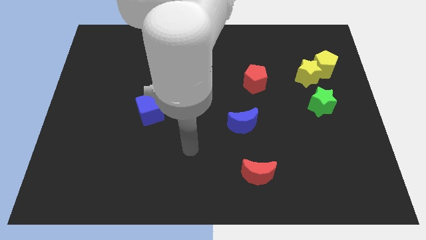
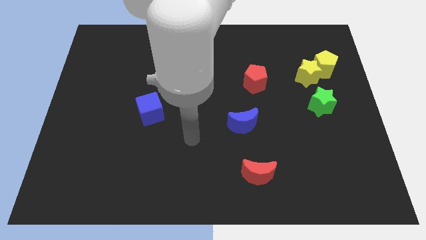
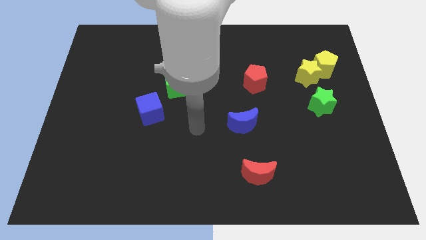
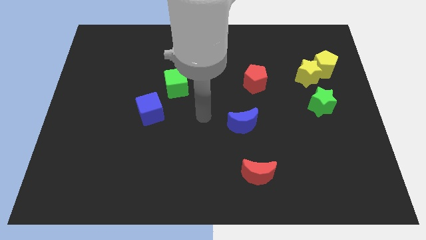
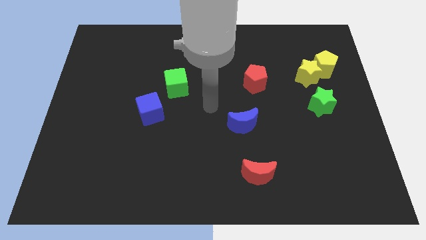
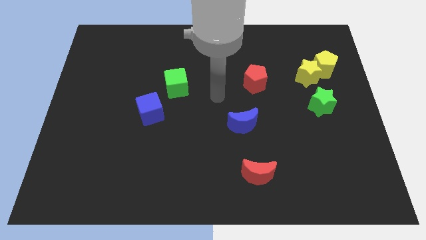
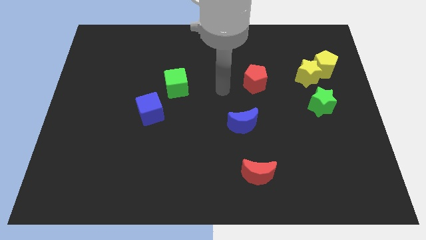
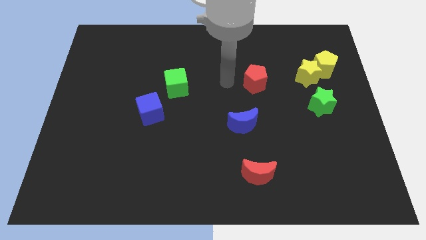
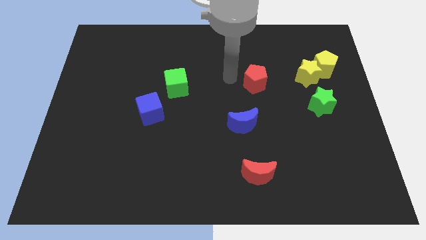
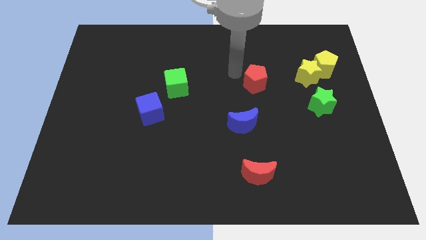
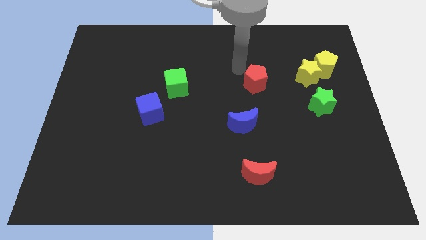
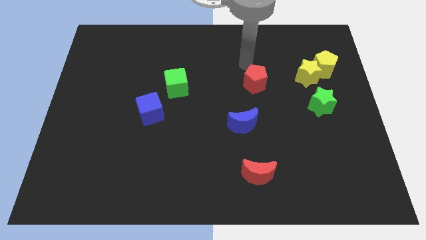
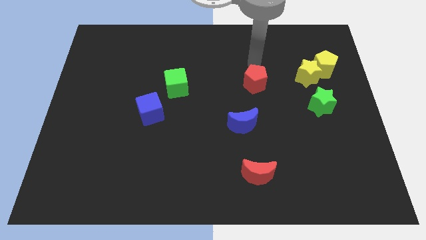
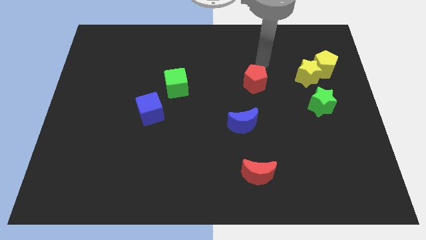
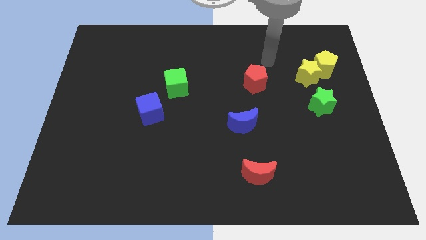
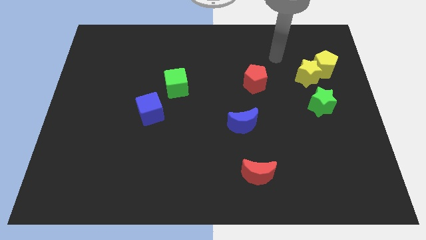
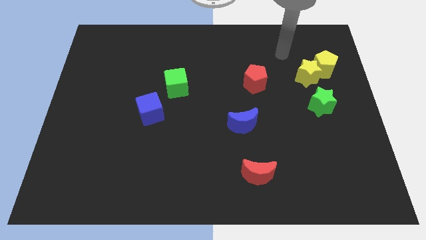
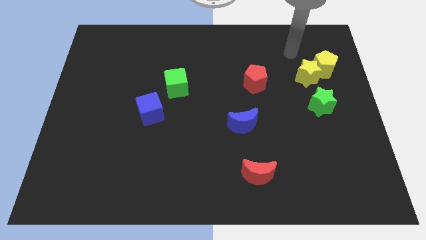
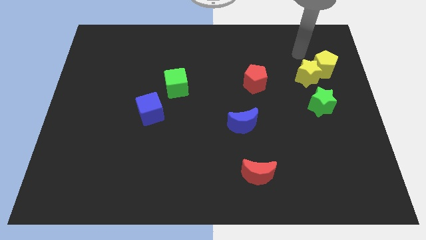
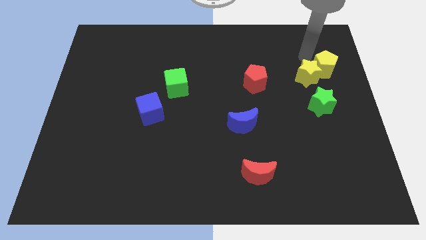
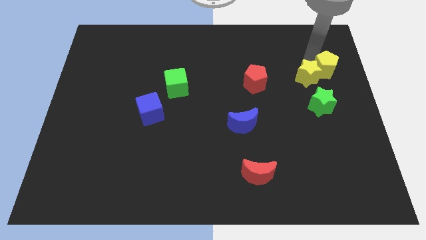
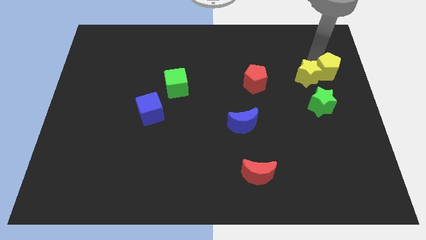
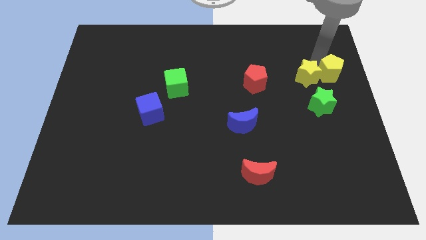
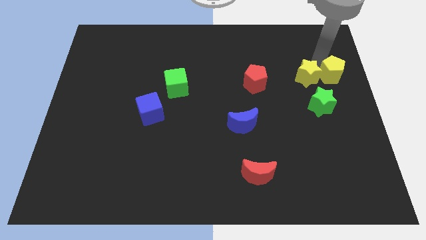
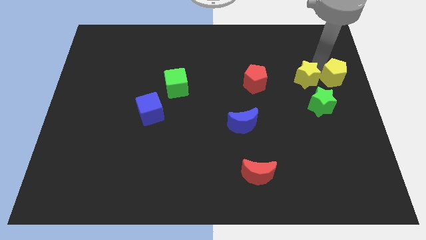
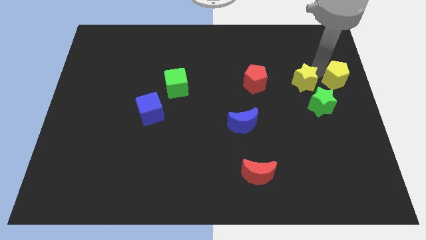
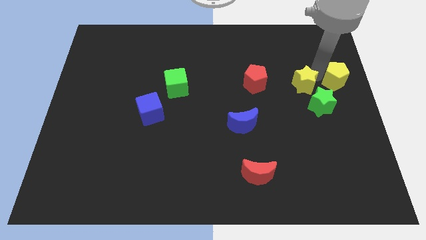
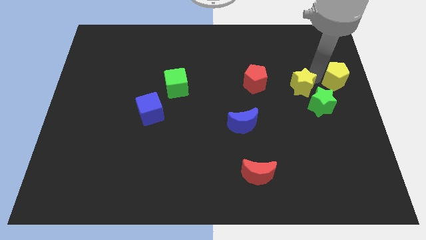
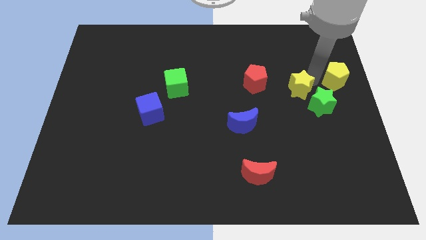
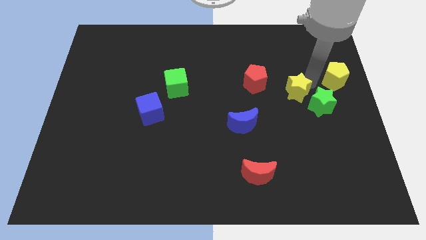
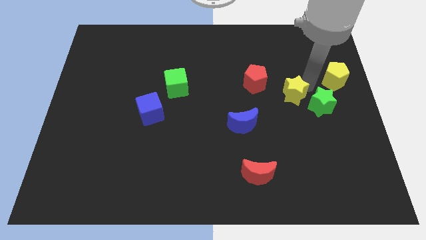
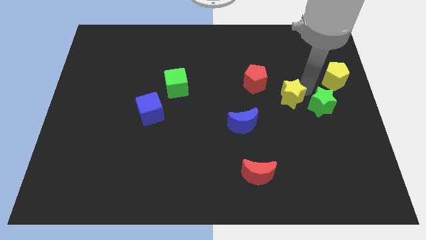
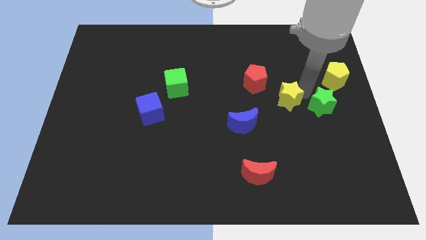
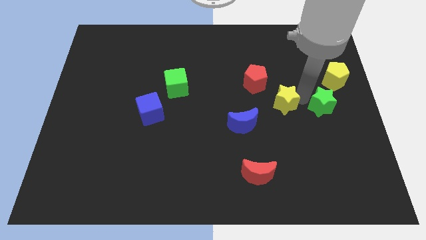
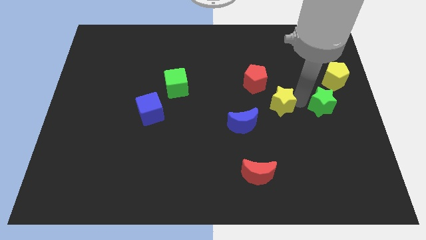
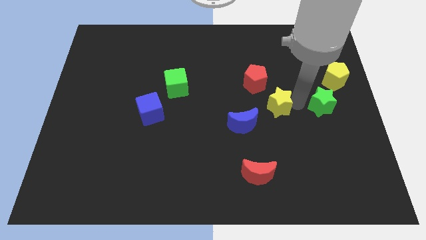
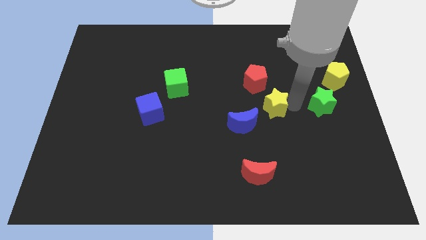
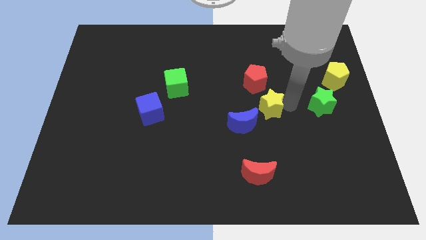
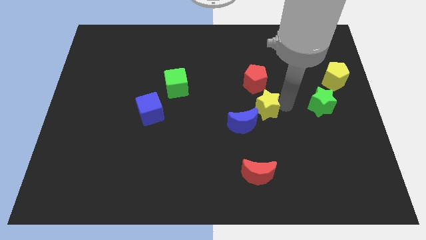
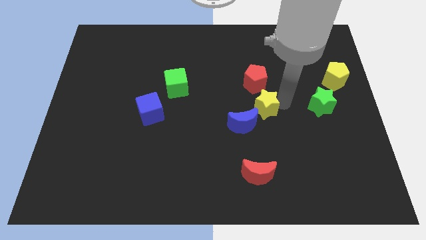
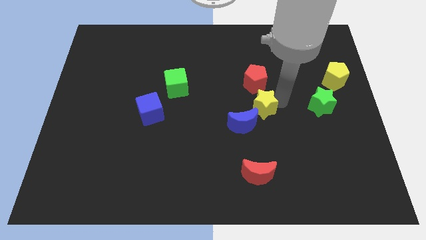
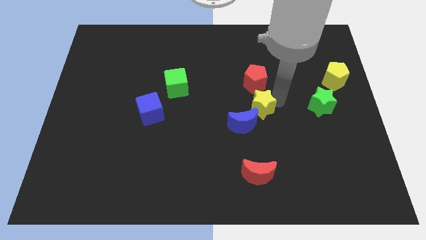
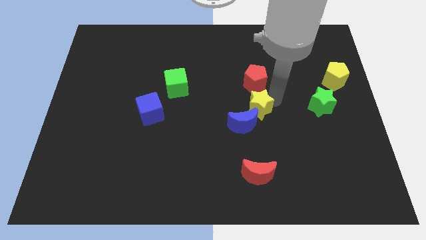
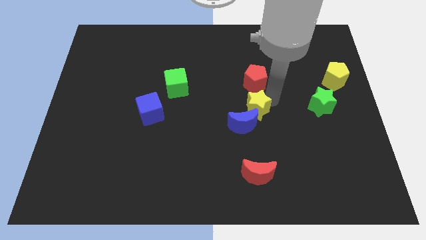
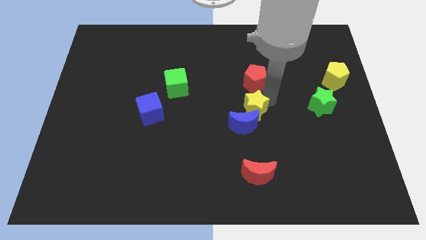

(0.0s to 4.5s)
put the yellow star next to the blue moon

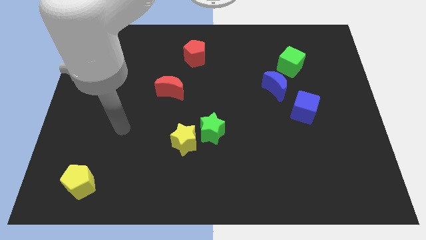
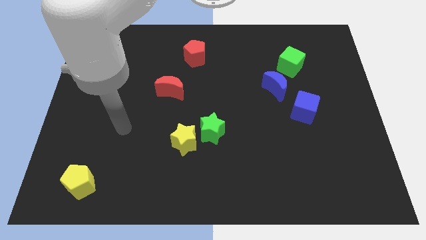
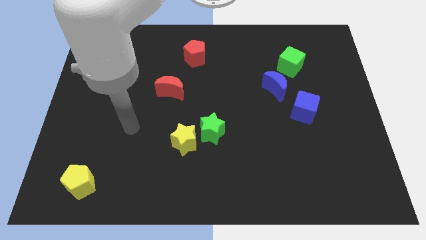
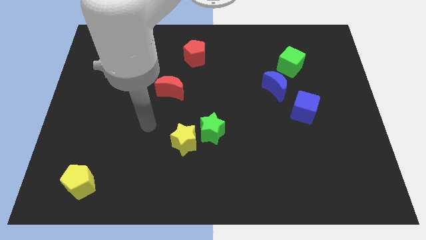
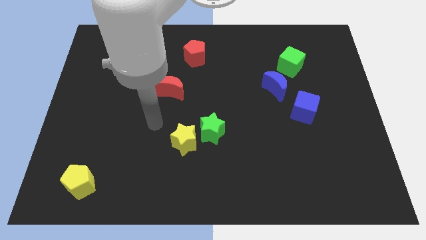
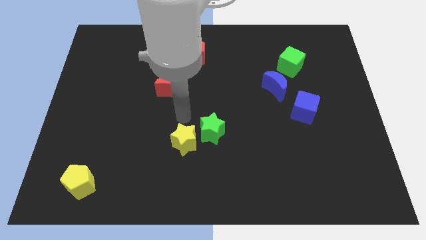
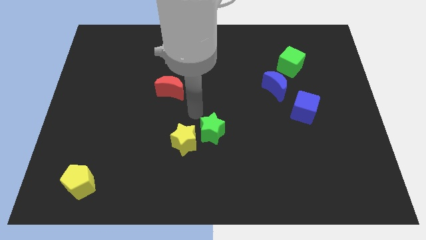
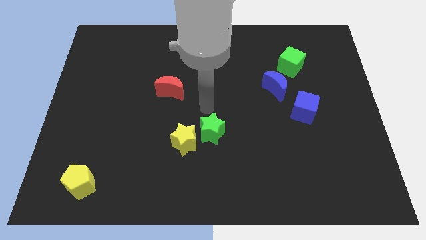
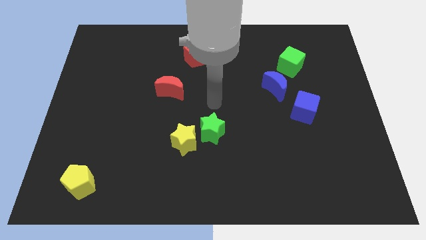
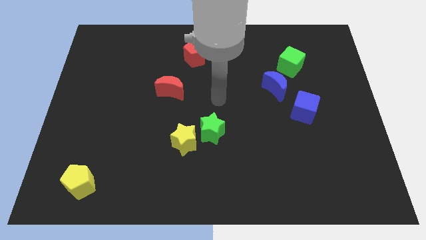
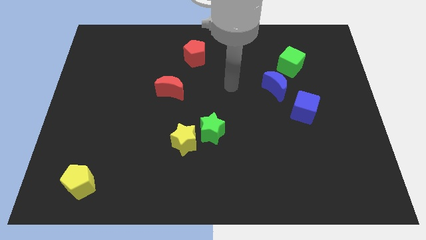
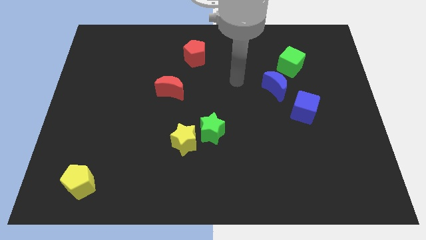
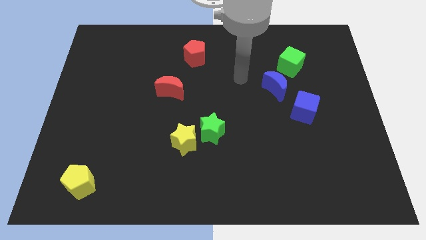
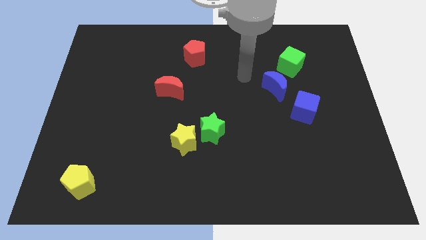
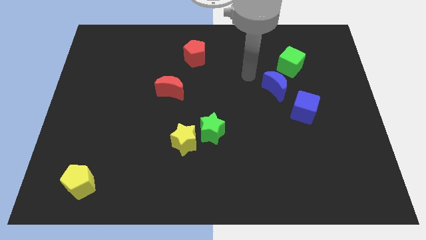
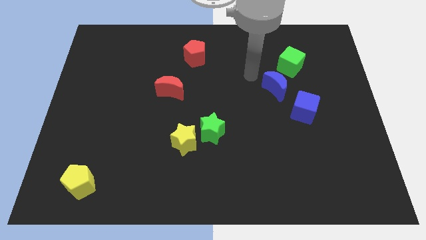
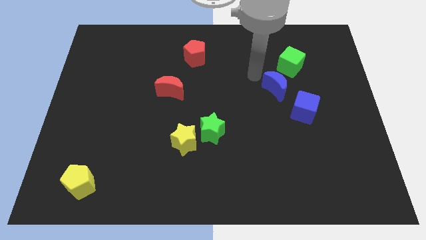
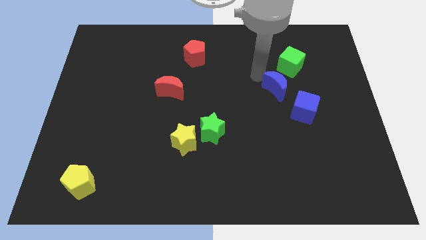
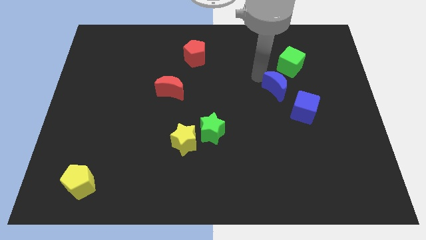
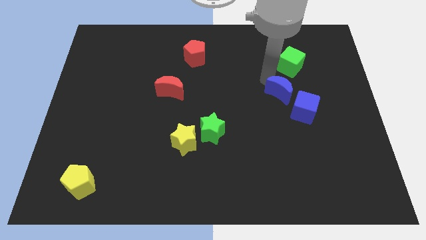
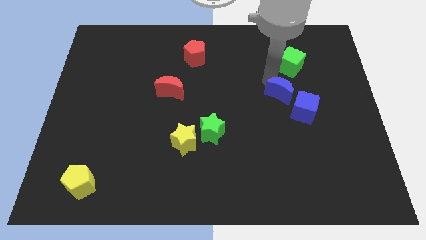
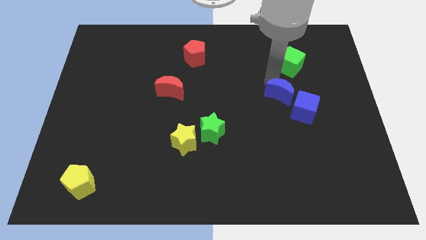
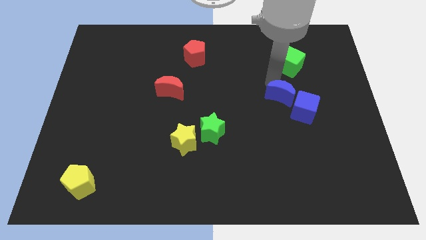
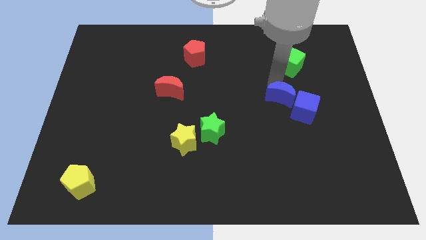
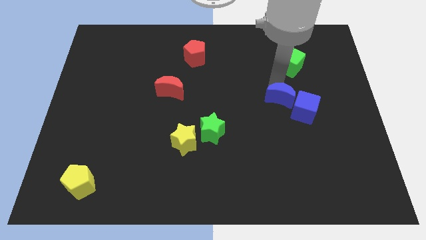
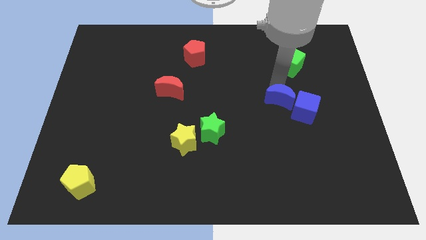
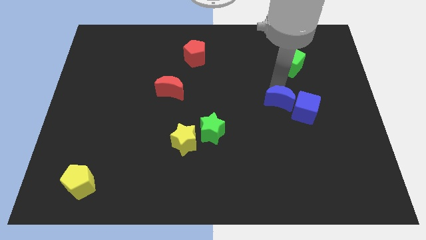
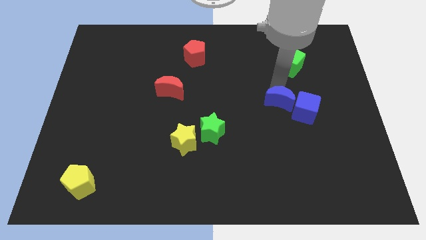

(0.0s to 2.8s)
push the blue moon next to the blue cube

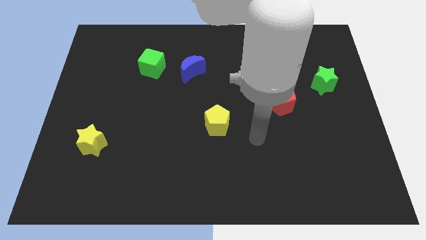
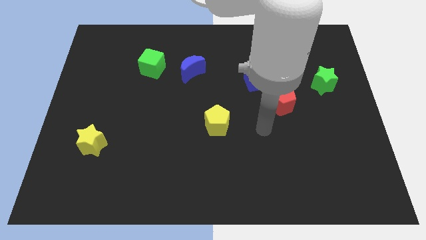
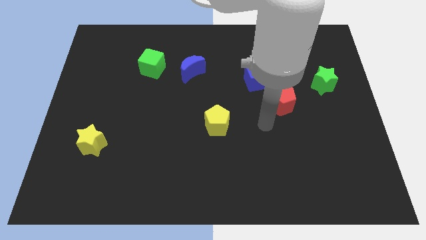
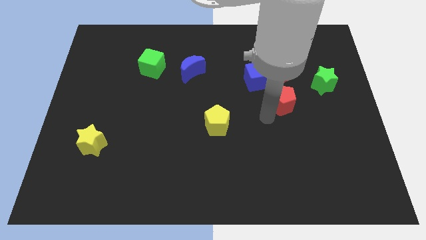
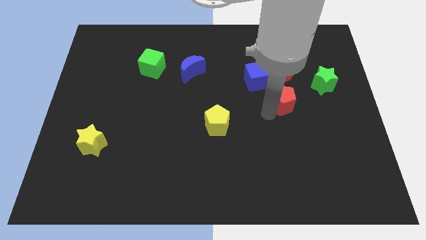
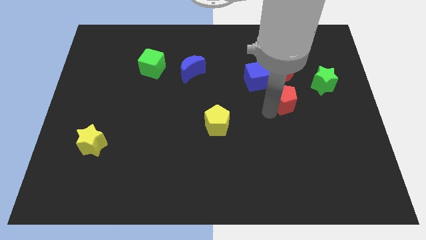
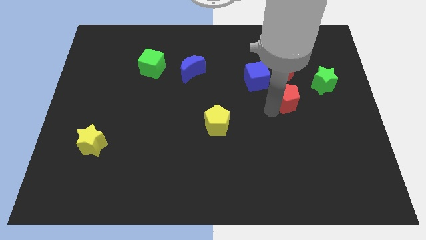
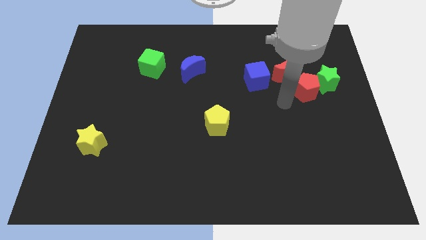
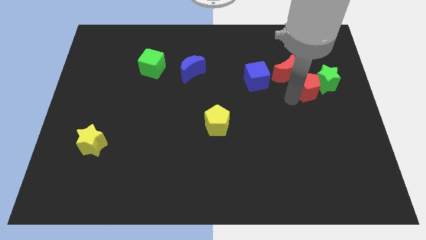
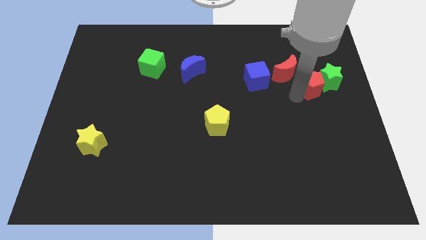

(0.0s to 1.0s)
slide the red pentagon next to the green star
